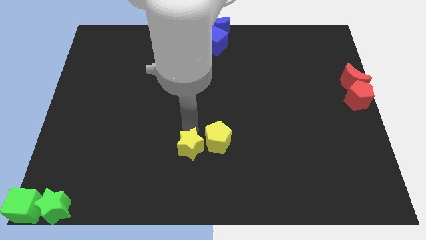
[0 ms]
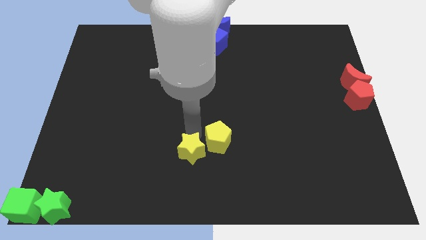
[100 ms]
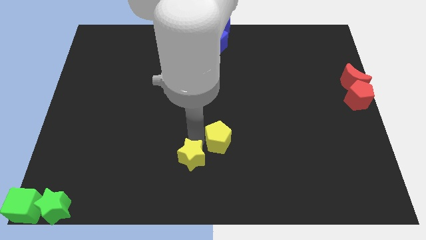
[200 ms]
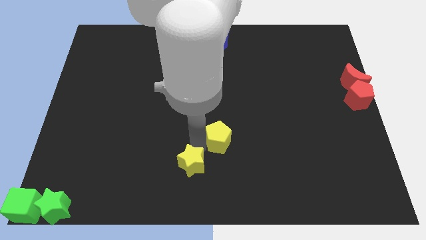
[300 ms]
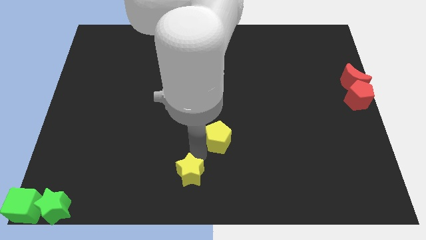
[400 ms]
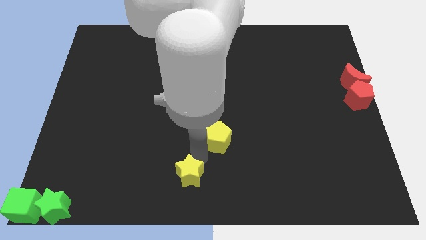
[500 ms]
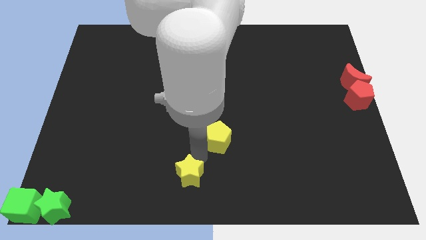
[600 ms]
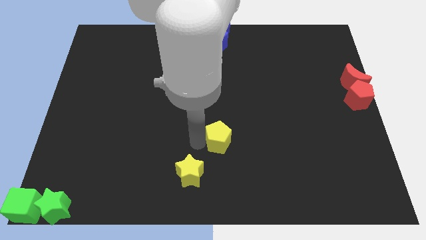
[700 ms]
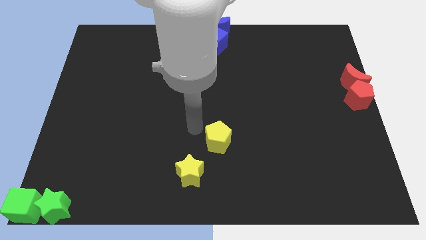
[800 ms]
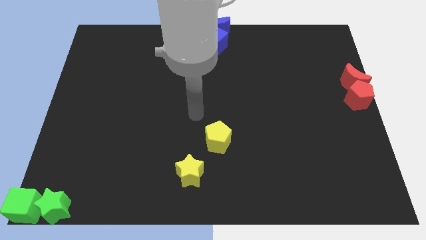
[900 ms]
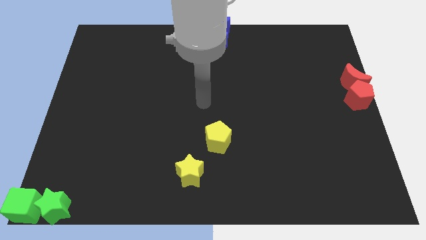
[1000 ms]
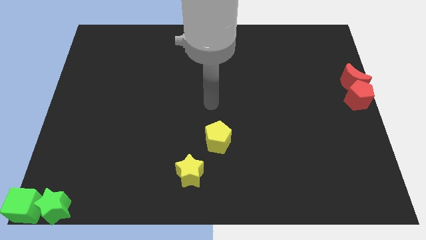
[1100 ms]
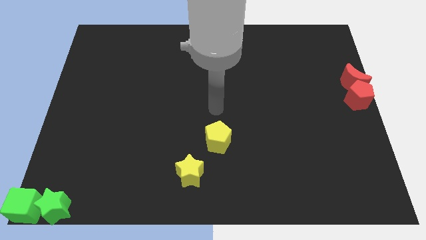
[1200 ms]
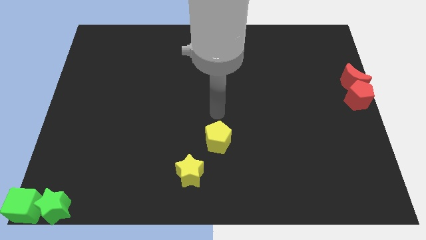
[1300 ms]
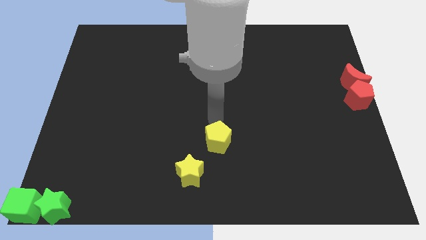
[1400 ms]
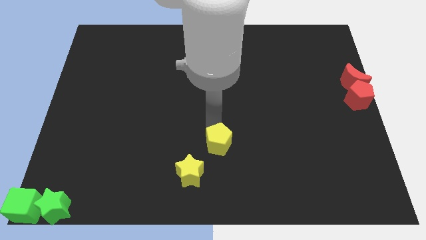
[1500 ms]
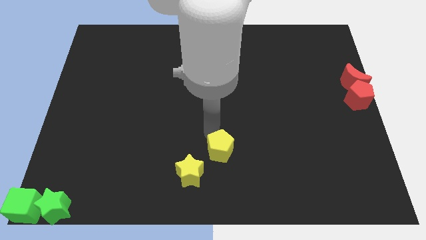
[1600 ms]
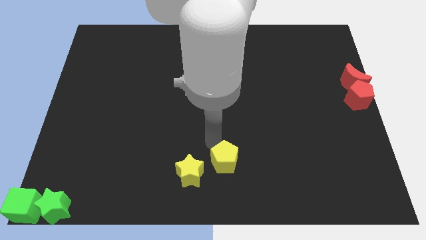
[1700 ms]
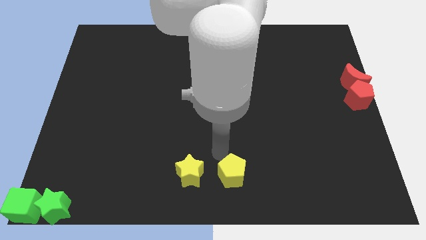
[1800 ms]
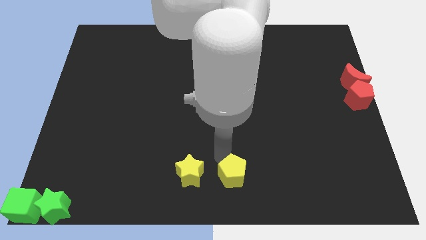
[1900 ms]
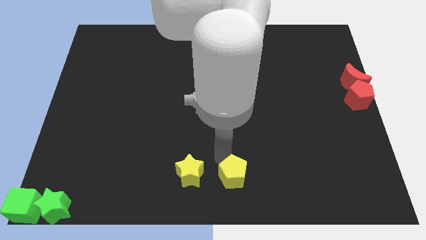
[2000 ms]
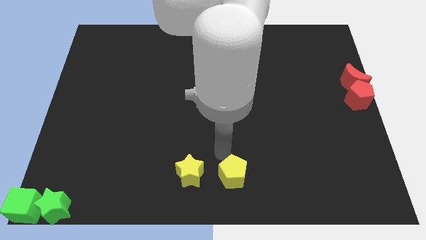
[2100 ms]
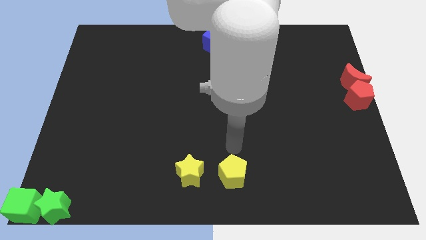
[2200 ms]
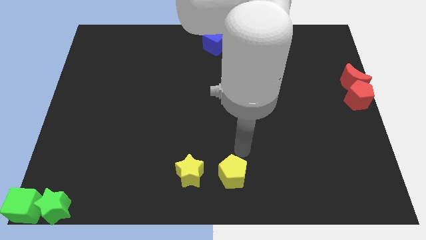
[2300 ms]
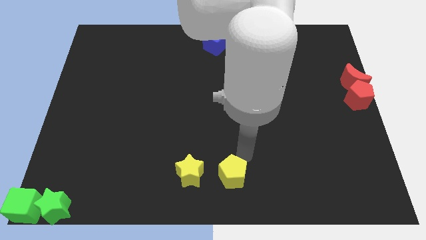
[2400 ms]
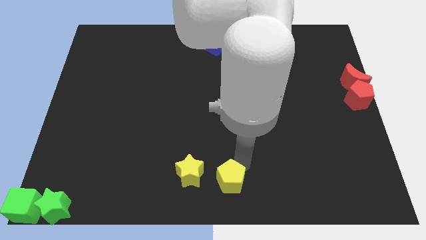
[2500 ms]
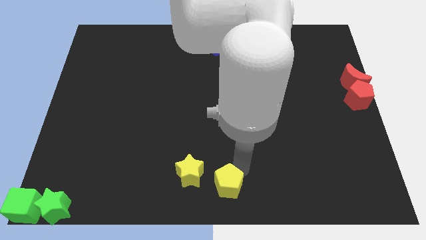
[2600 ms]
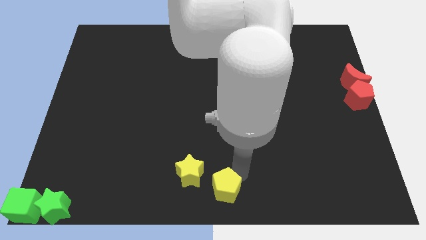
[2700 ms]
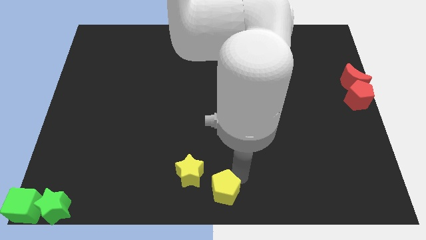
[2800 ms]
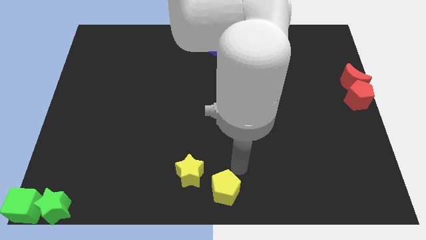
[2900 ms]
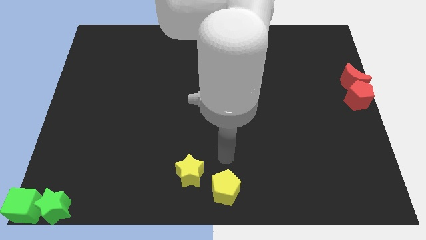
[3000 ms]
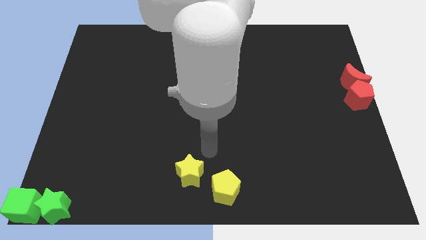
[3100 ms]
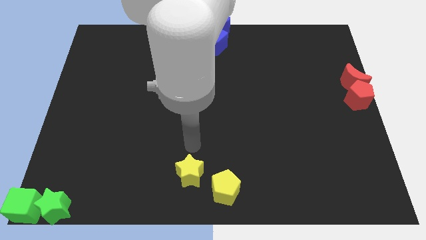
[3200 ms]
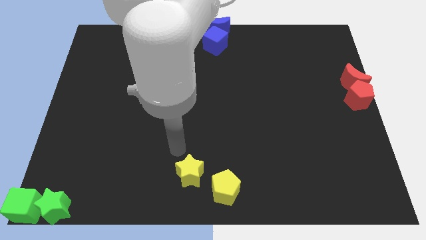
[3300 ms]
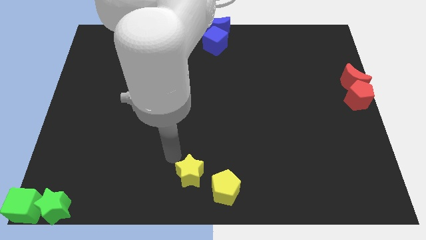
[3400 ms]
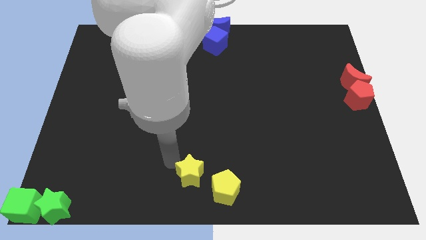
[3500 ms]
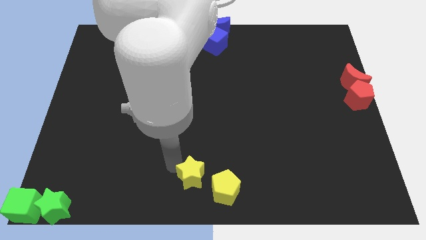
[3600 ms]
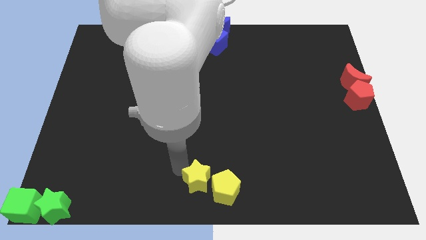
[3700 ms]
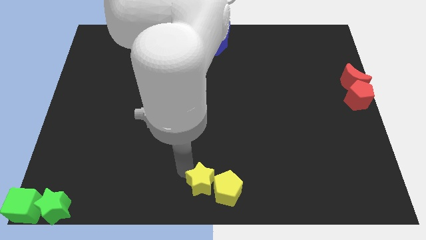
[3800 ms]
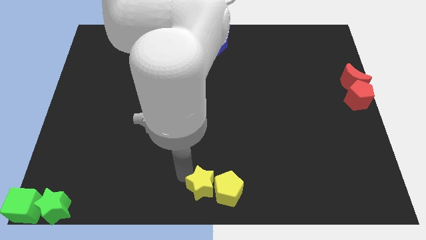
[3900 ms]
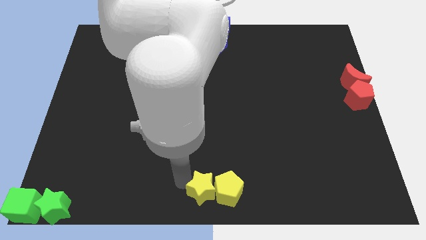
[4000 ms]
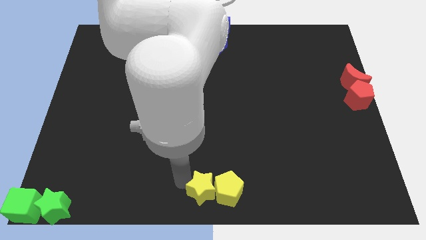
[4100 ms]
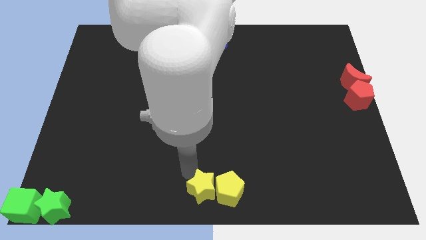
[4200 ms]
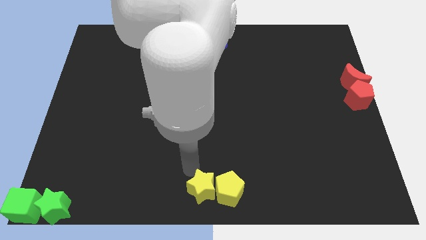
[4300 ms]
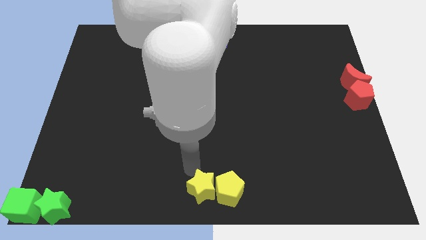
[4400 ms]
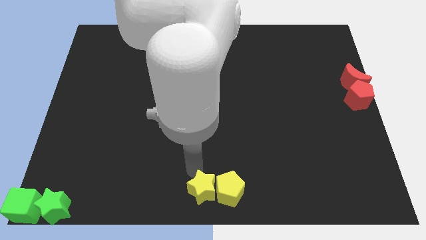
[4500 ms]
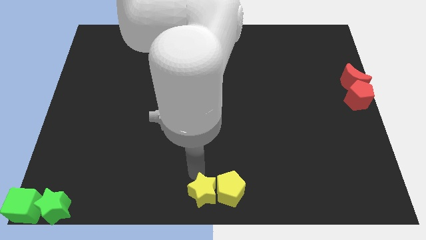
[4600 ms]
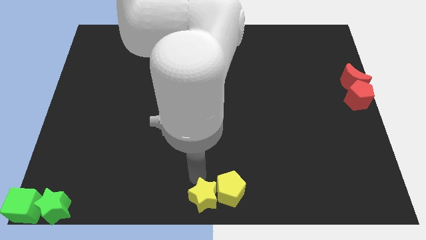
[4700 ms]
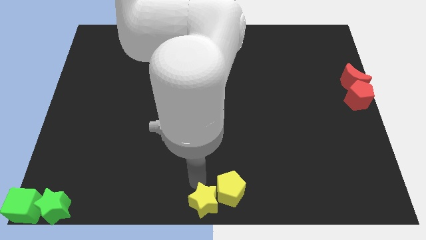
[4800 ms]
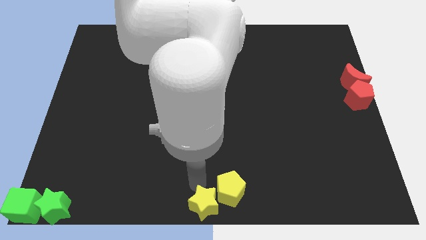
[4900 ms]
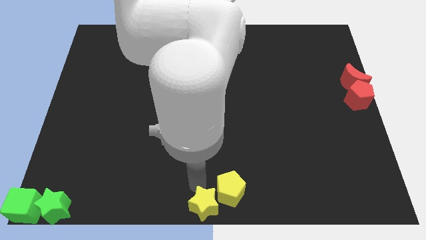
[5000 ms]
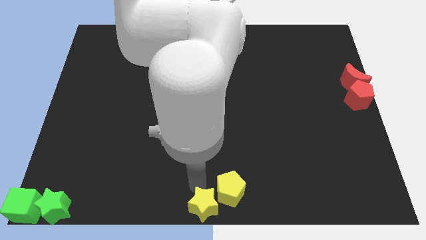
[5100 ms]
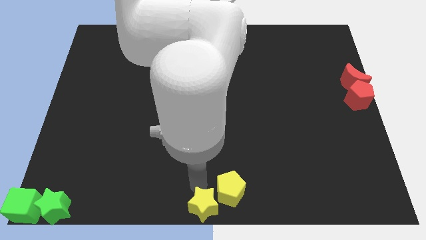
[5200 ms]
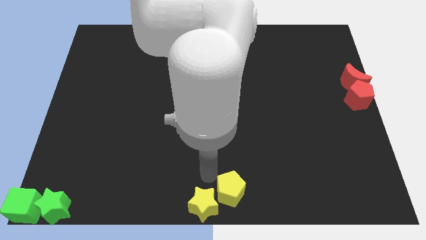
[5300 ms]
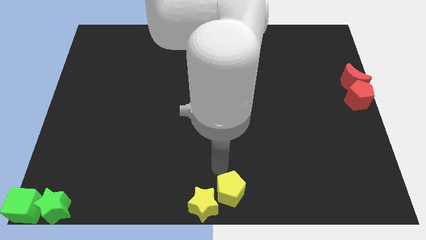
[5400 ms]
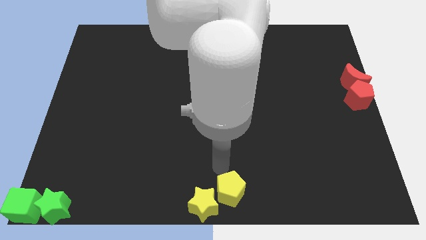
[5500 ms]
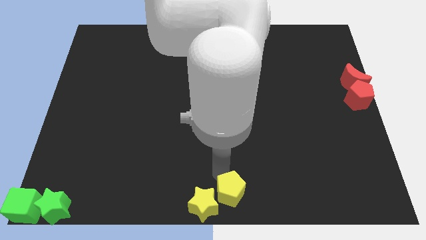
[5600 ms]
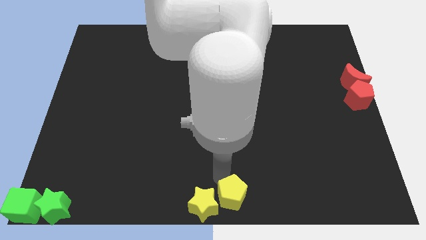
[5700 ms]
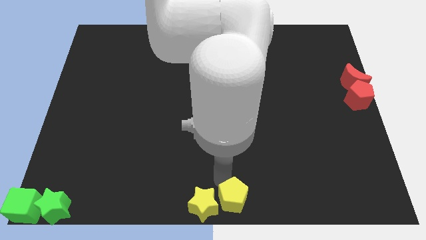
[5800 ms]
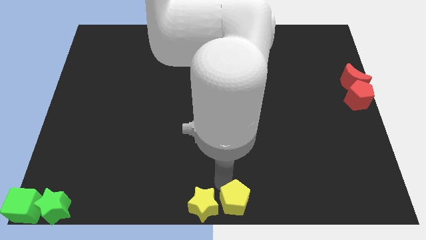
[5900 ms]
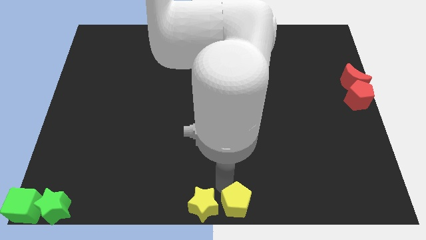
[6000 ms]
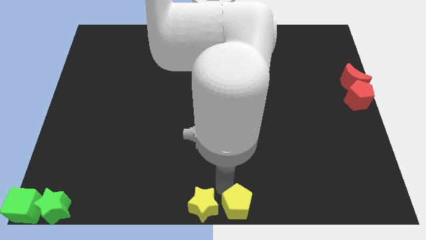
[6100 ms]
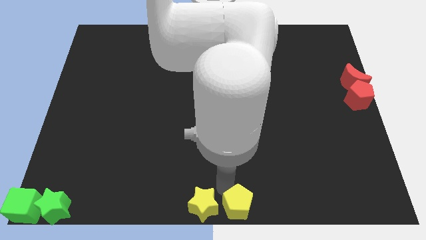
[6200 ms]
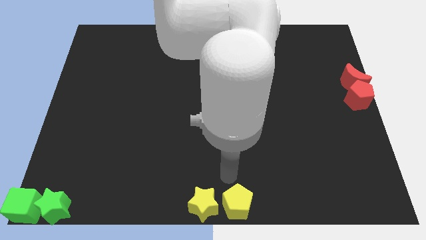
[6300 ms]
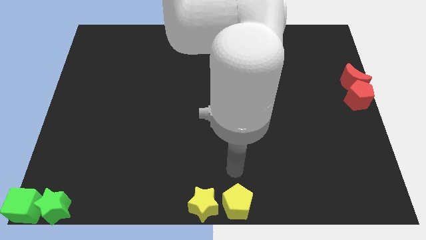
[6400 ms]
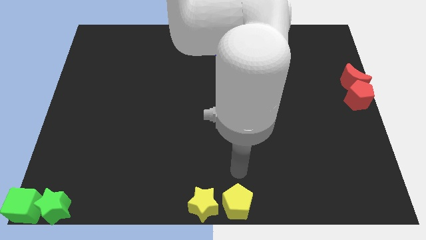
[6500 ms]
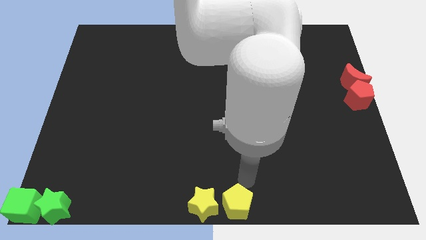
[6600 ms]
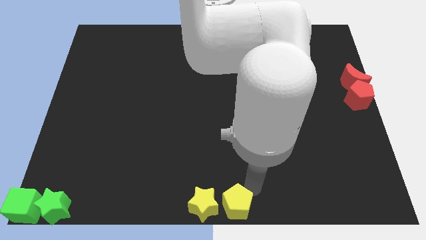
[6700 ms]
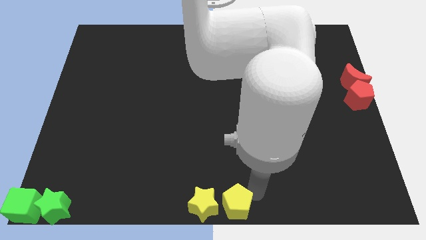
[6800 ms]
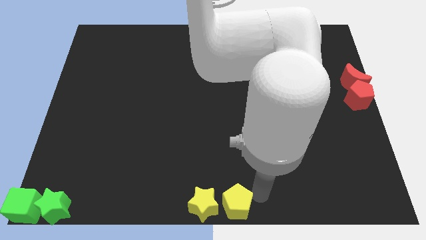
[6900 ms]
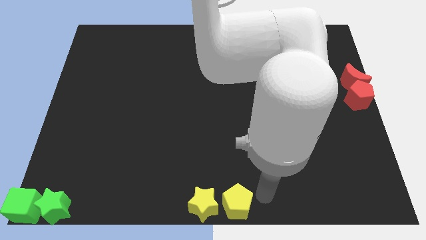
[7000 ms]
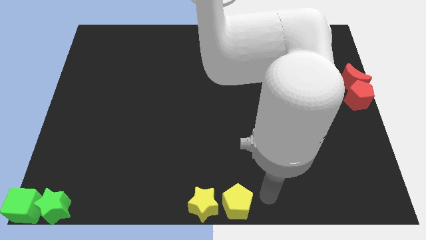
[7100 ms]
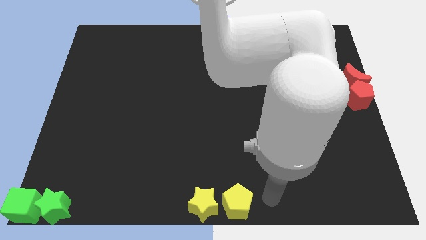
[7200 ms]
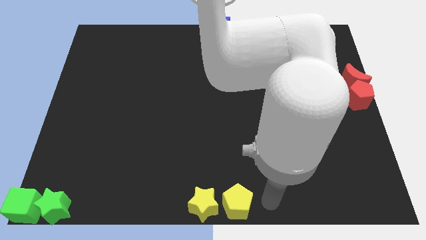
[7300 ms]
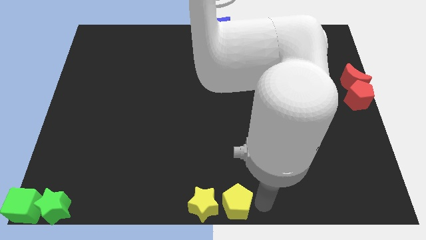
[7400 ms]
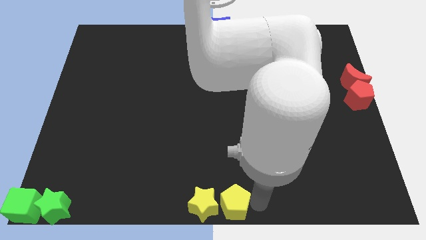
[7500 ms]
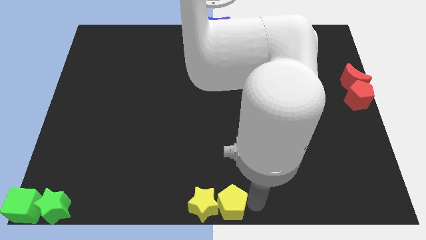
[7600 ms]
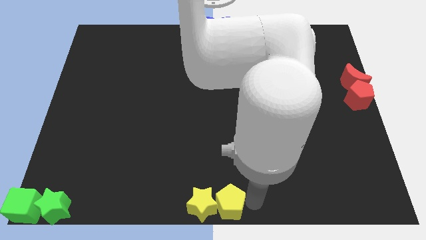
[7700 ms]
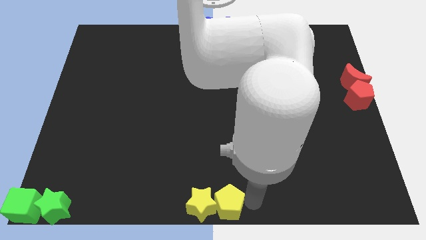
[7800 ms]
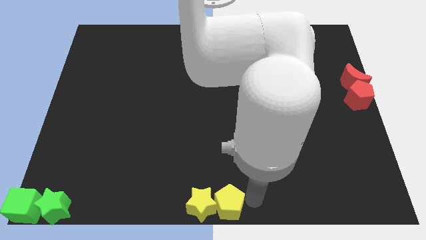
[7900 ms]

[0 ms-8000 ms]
push the yellow objects together at the bottom center of the board

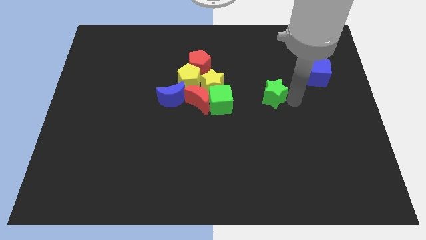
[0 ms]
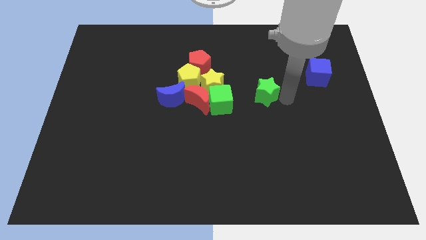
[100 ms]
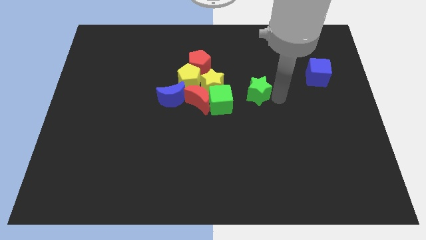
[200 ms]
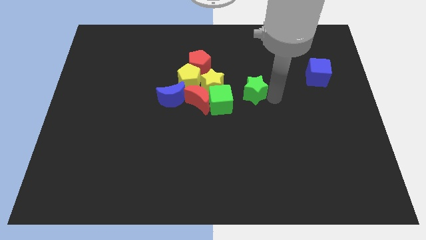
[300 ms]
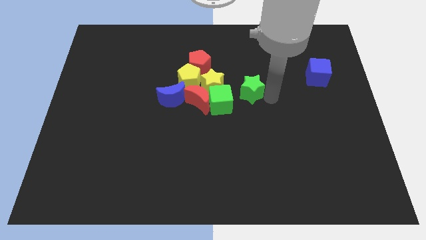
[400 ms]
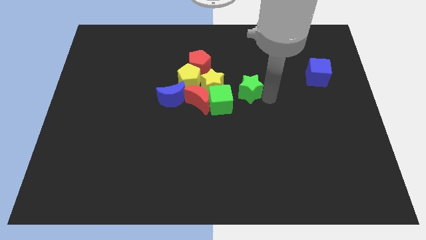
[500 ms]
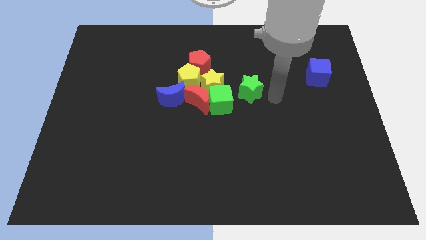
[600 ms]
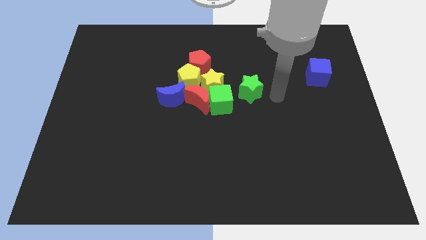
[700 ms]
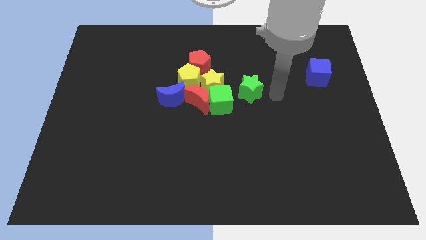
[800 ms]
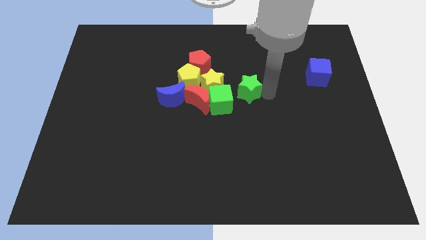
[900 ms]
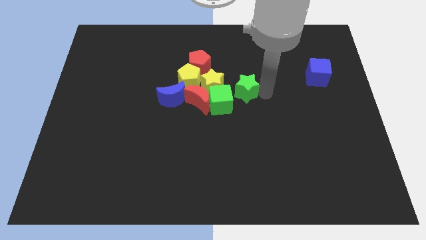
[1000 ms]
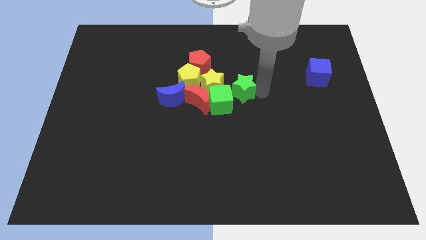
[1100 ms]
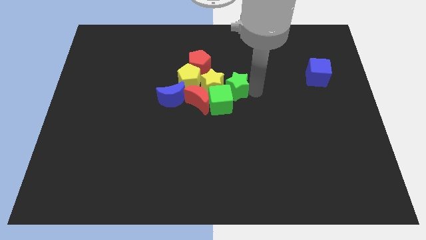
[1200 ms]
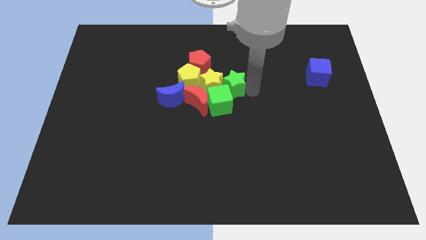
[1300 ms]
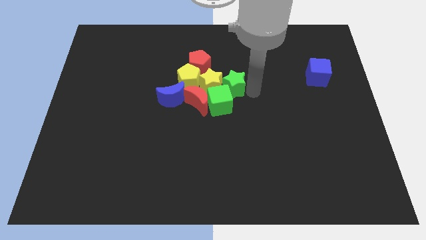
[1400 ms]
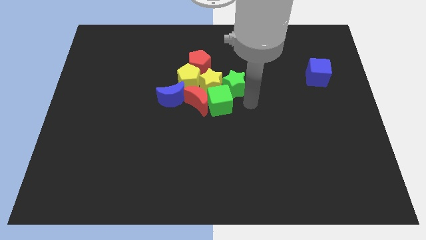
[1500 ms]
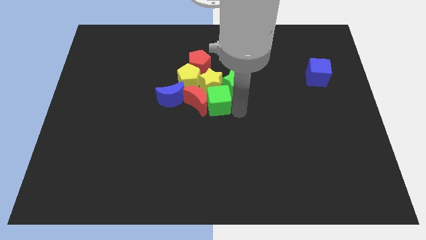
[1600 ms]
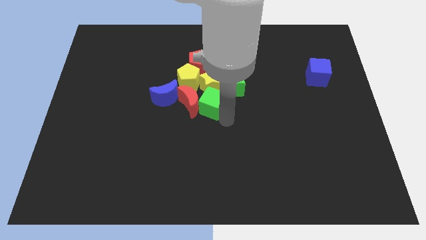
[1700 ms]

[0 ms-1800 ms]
move the green star towards the group of blocks
